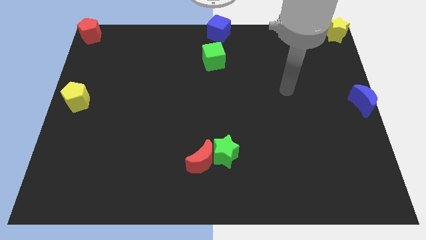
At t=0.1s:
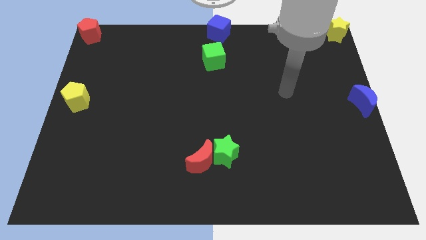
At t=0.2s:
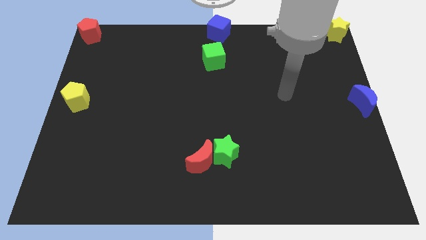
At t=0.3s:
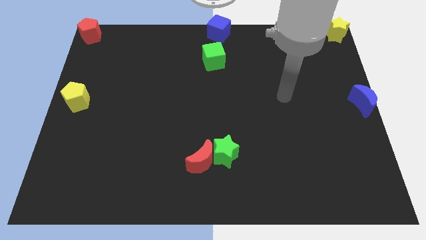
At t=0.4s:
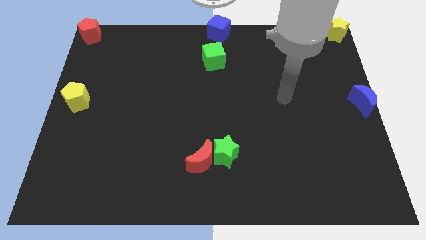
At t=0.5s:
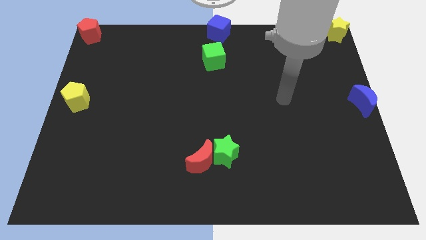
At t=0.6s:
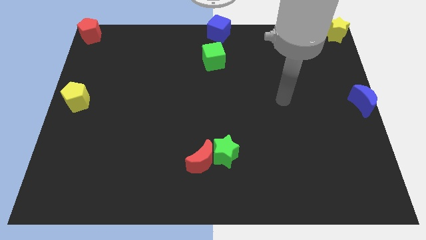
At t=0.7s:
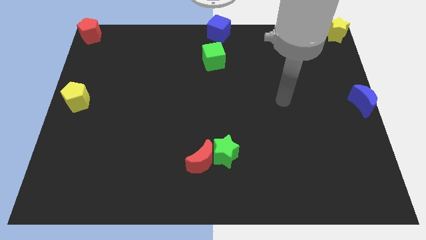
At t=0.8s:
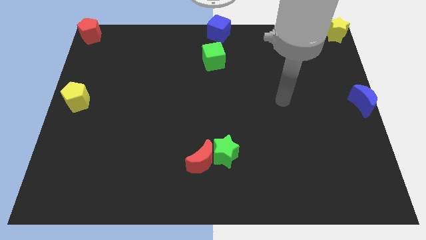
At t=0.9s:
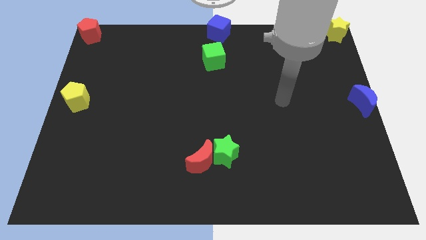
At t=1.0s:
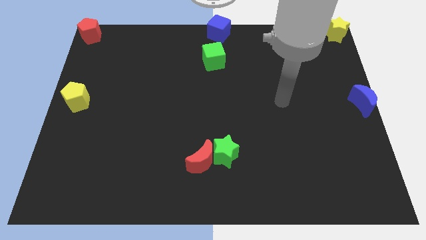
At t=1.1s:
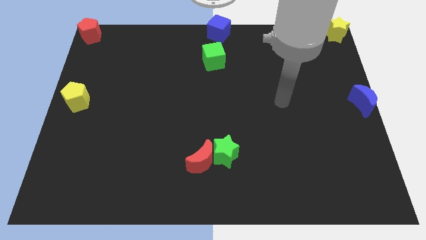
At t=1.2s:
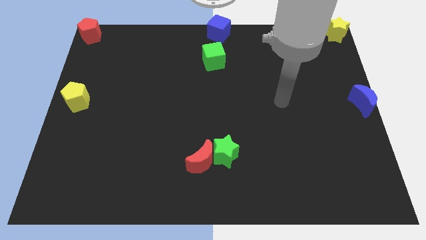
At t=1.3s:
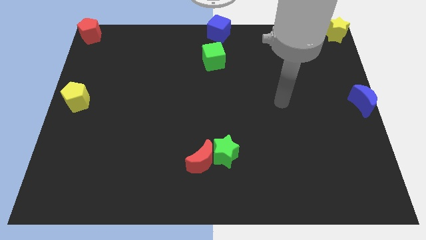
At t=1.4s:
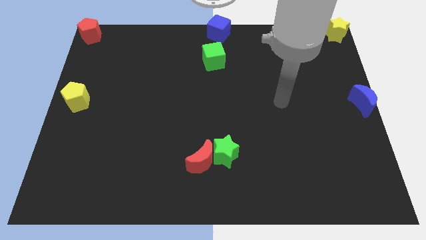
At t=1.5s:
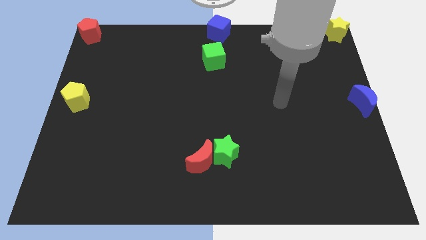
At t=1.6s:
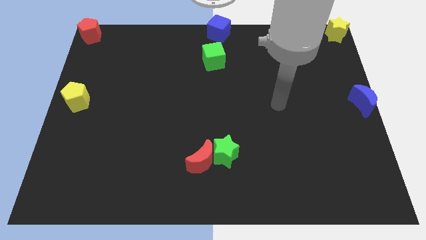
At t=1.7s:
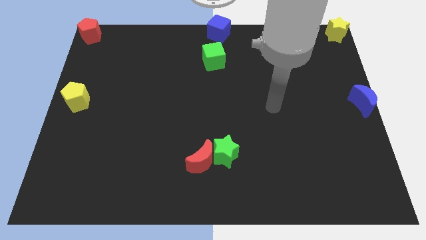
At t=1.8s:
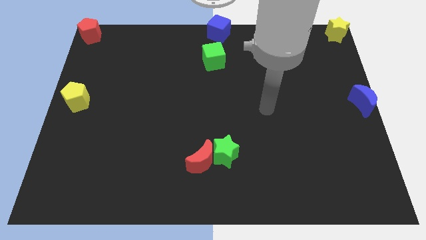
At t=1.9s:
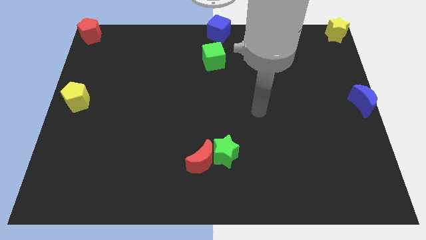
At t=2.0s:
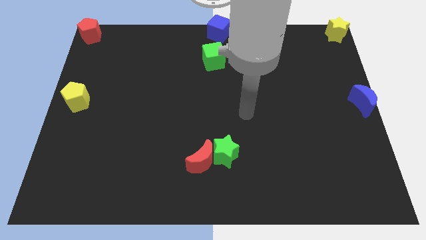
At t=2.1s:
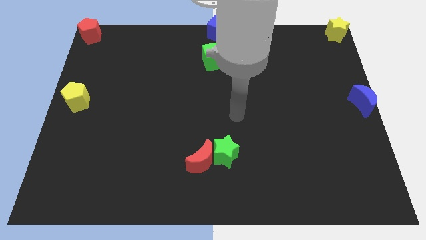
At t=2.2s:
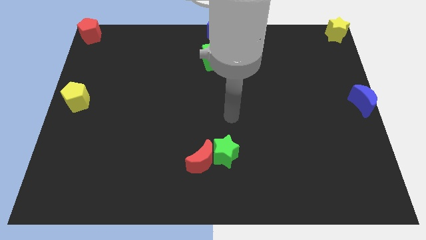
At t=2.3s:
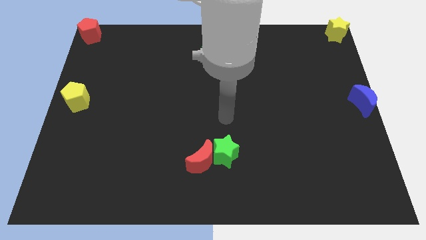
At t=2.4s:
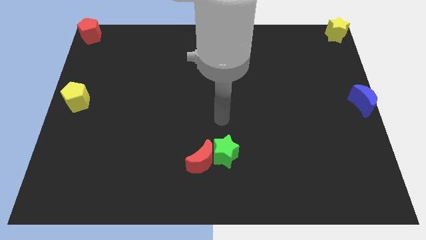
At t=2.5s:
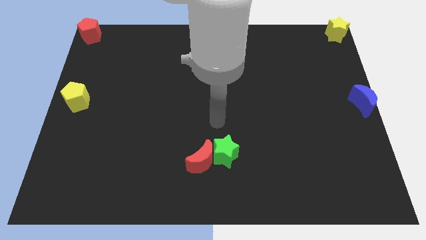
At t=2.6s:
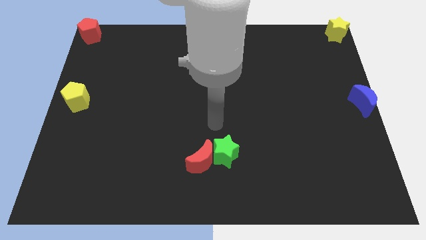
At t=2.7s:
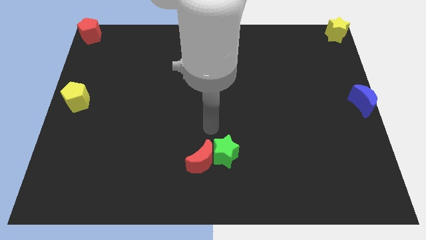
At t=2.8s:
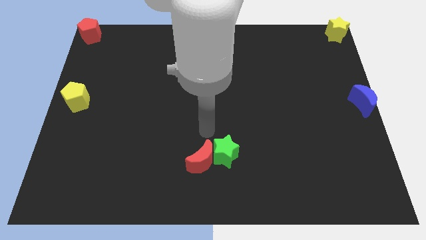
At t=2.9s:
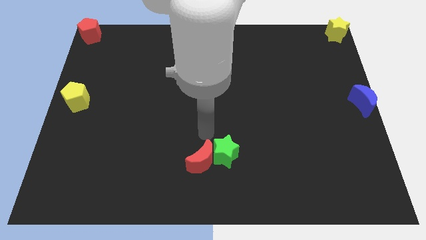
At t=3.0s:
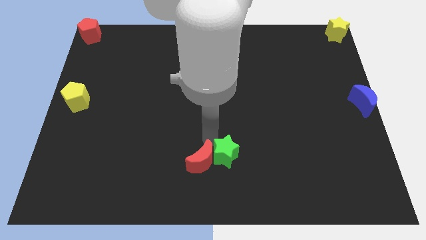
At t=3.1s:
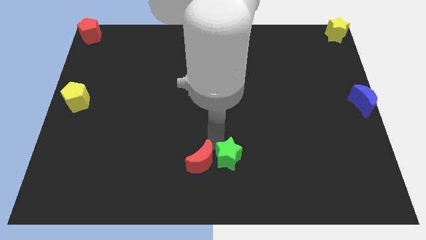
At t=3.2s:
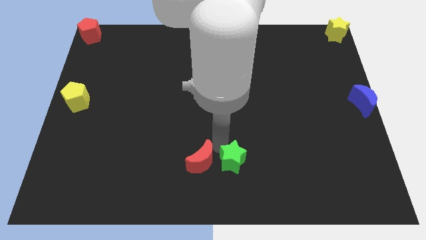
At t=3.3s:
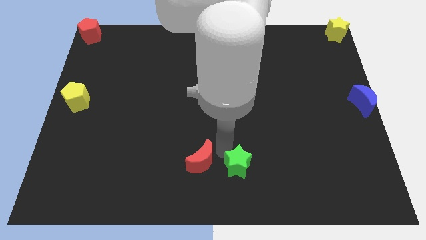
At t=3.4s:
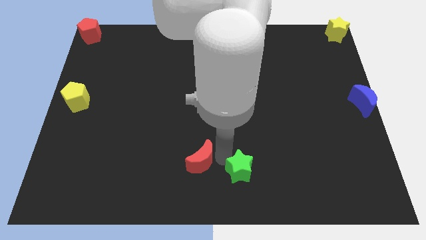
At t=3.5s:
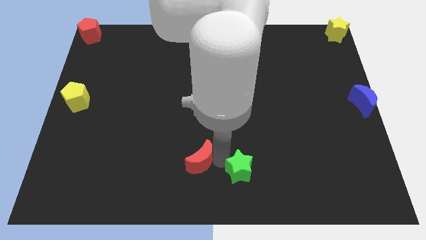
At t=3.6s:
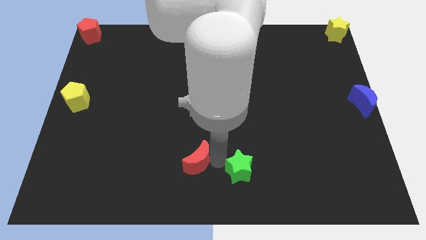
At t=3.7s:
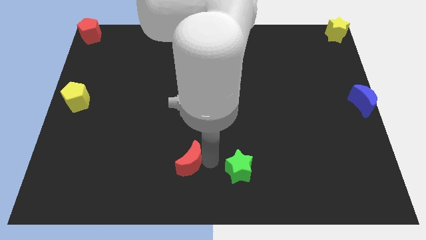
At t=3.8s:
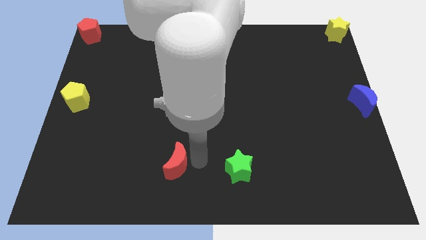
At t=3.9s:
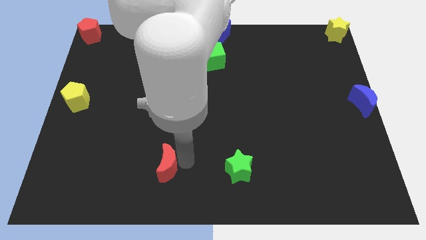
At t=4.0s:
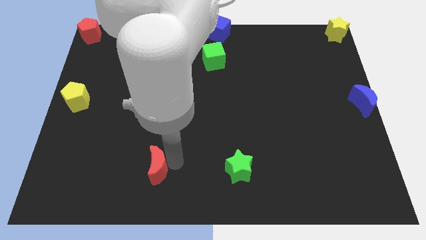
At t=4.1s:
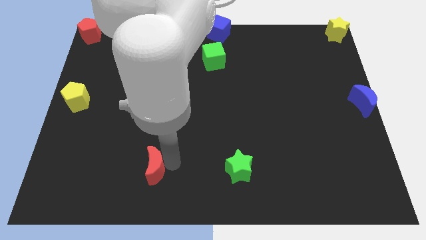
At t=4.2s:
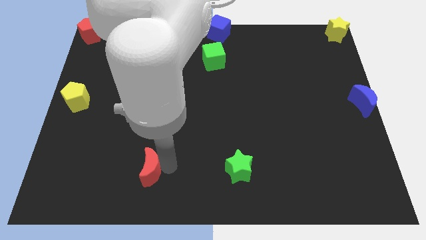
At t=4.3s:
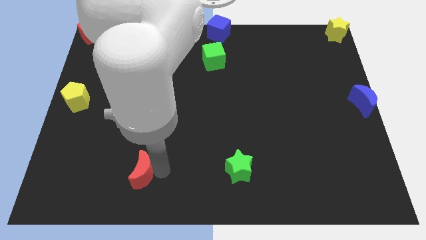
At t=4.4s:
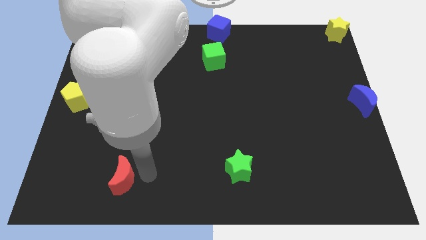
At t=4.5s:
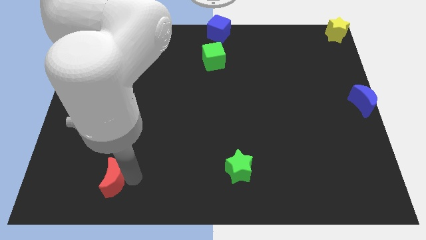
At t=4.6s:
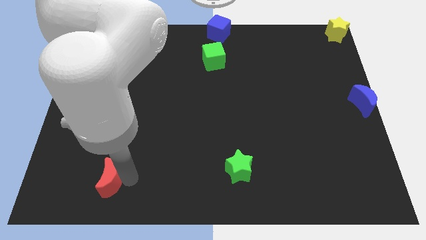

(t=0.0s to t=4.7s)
separate the red moon from green star towards left

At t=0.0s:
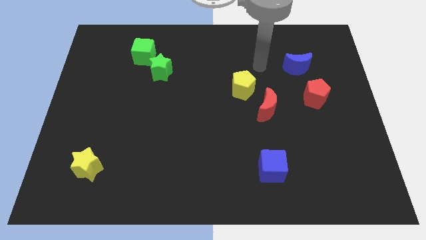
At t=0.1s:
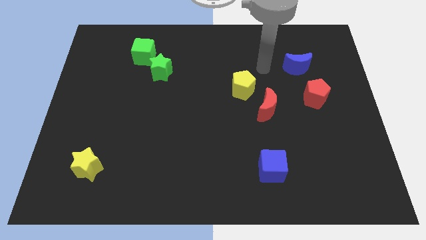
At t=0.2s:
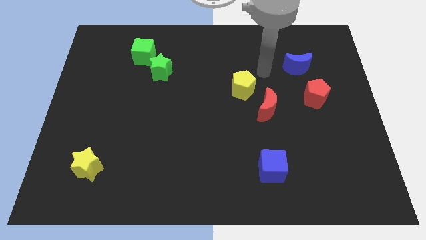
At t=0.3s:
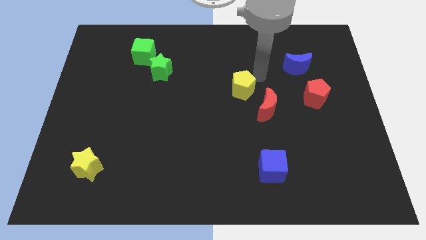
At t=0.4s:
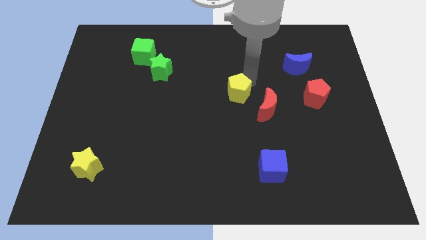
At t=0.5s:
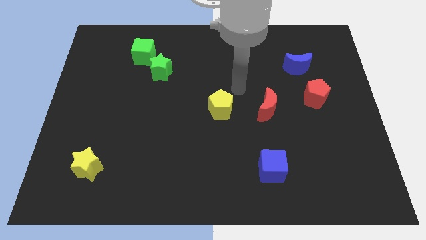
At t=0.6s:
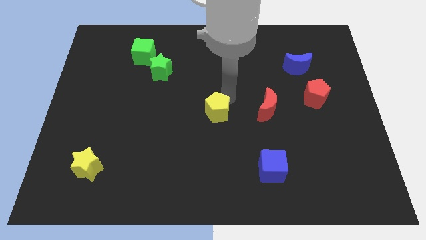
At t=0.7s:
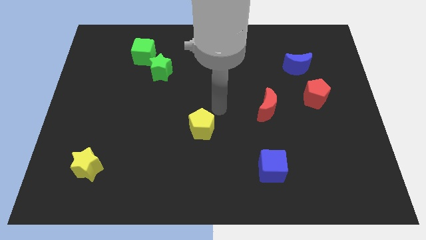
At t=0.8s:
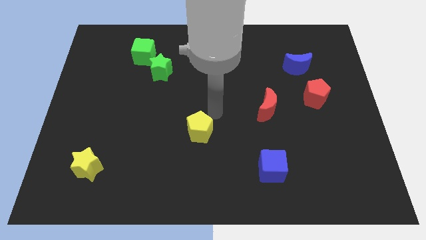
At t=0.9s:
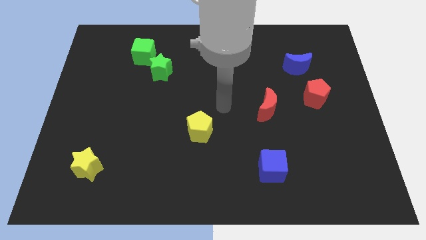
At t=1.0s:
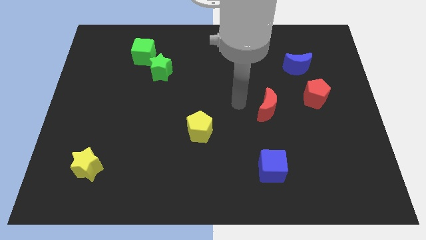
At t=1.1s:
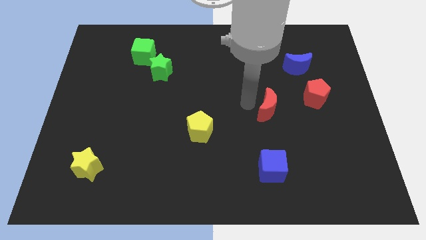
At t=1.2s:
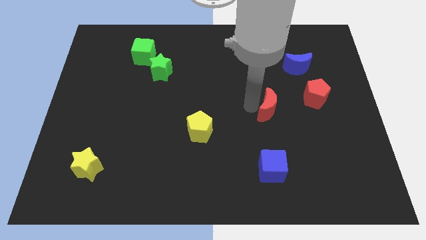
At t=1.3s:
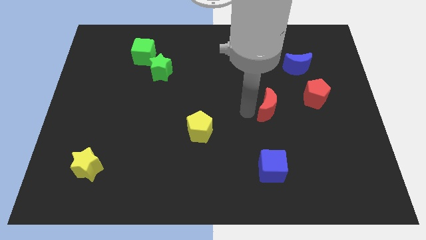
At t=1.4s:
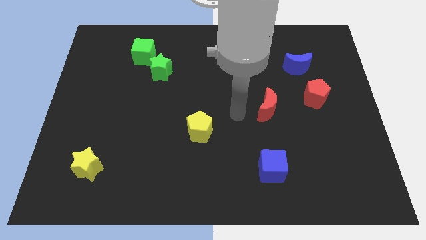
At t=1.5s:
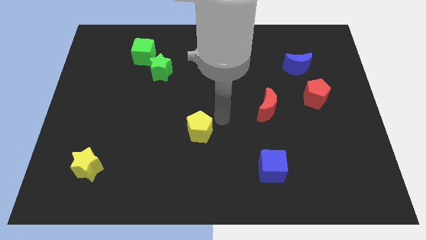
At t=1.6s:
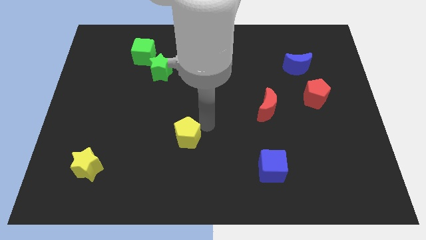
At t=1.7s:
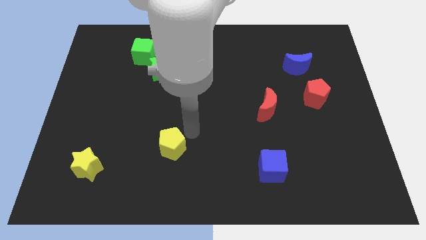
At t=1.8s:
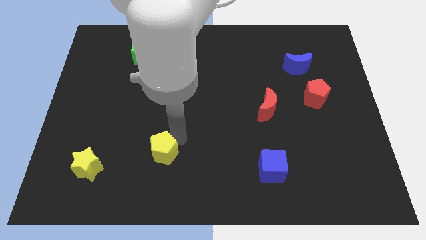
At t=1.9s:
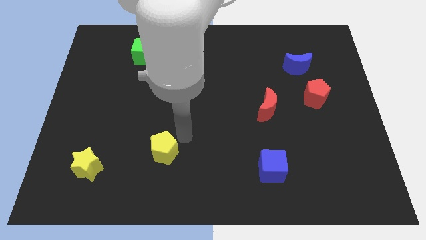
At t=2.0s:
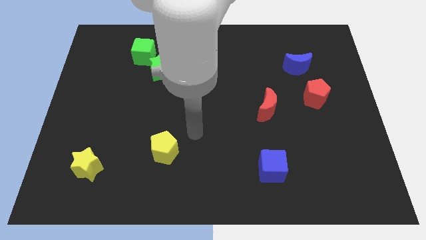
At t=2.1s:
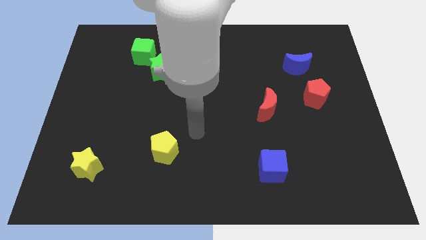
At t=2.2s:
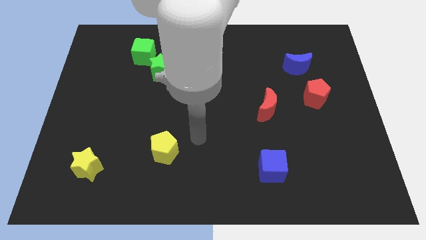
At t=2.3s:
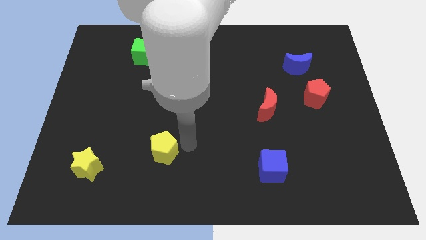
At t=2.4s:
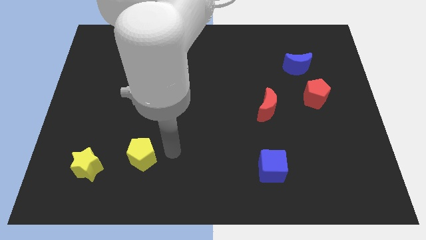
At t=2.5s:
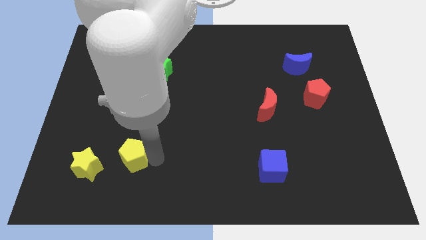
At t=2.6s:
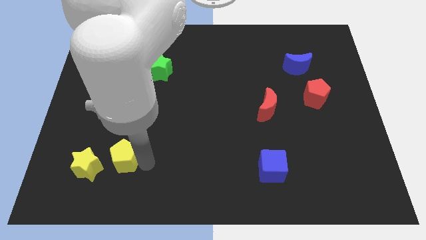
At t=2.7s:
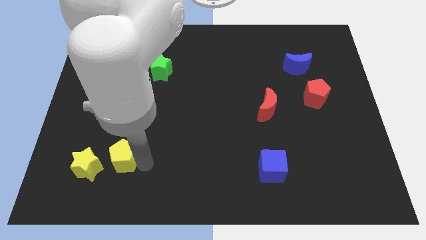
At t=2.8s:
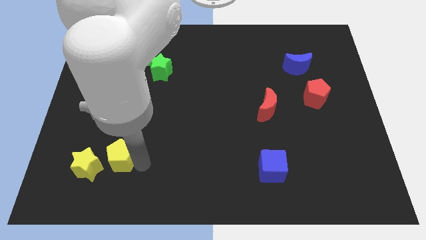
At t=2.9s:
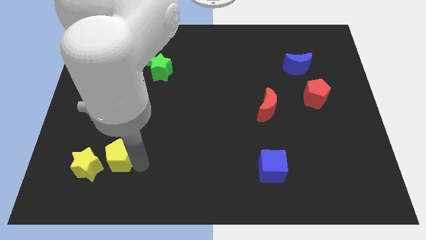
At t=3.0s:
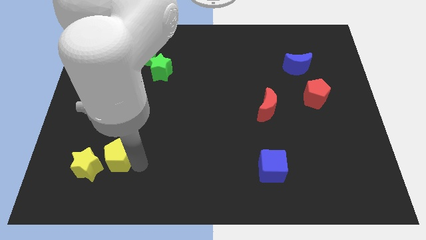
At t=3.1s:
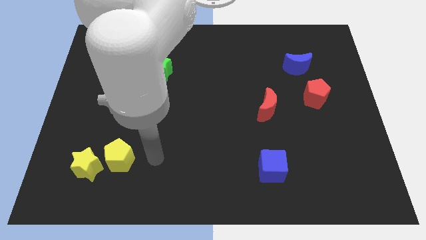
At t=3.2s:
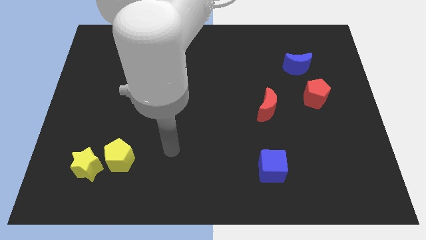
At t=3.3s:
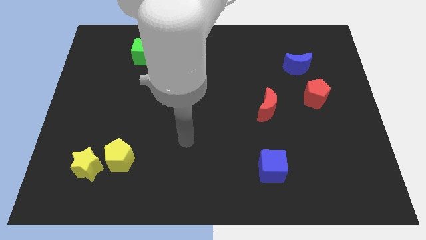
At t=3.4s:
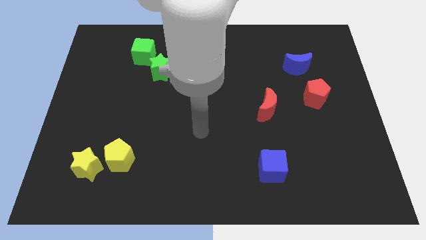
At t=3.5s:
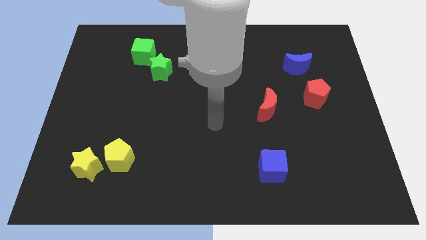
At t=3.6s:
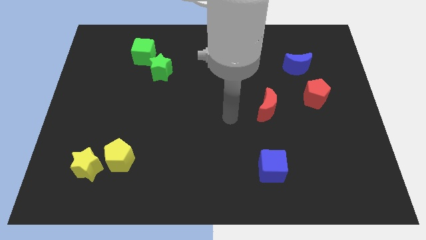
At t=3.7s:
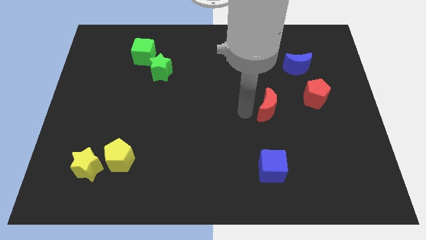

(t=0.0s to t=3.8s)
drag the yellow pentagon towards the yellow star

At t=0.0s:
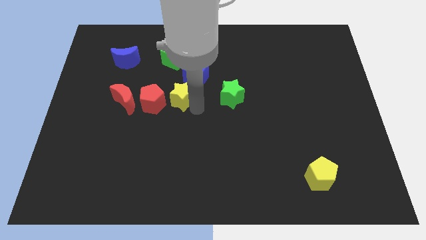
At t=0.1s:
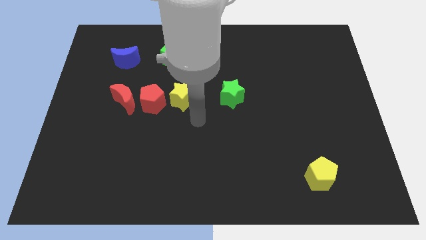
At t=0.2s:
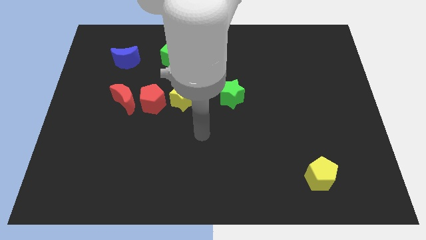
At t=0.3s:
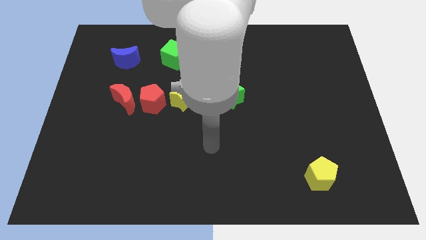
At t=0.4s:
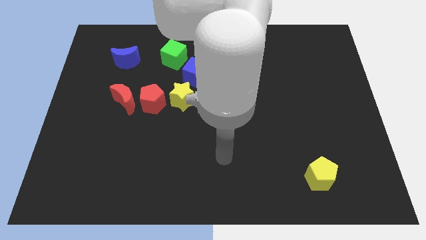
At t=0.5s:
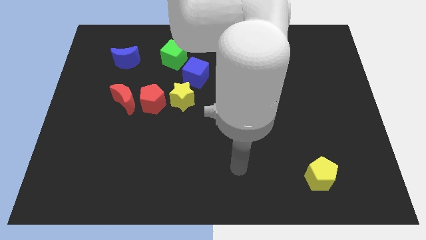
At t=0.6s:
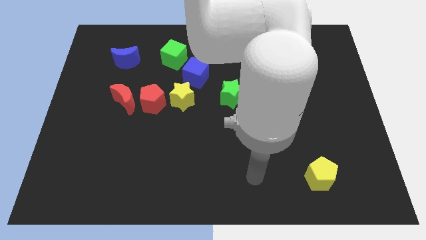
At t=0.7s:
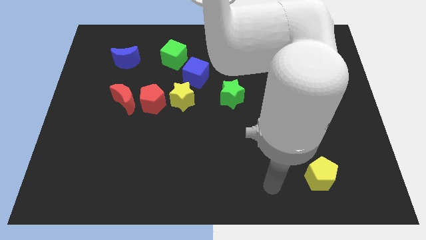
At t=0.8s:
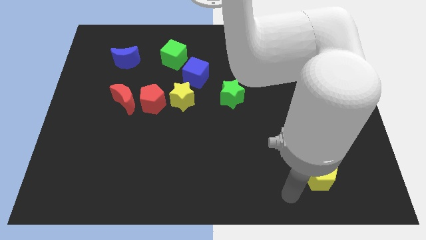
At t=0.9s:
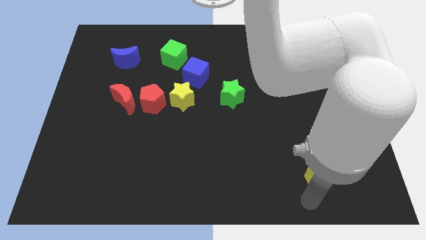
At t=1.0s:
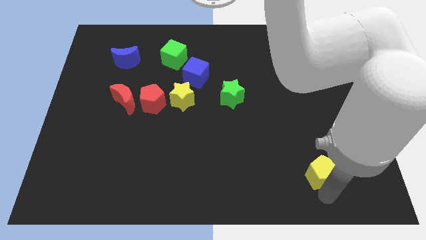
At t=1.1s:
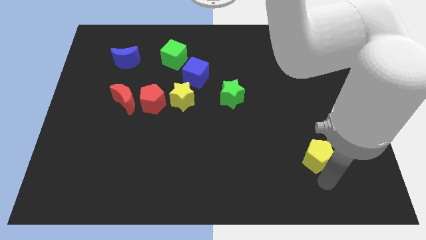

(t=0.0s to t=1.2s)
slightly push yellow pentagon to its top
